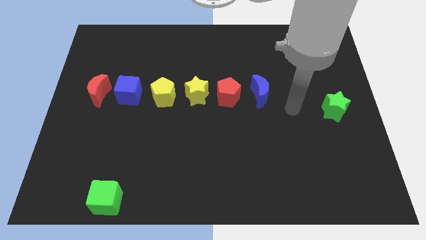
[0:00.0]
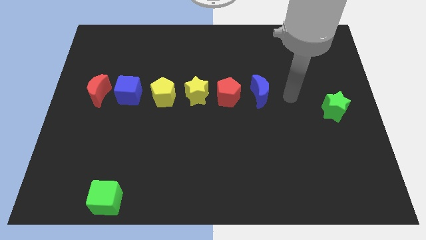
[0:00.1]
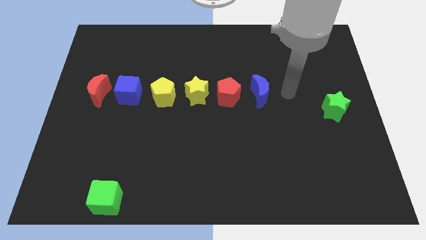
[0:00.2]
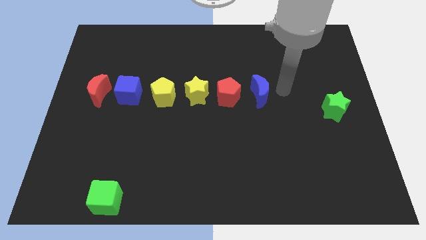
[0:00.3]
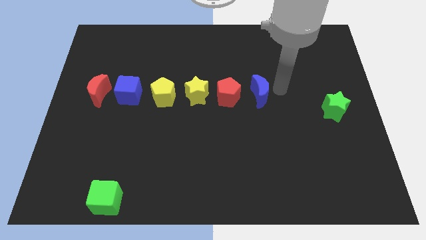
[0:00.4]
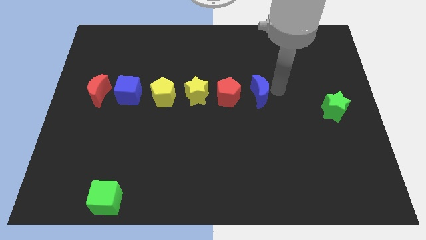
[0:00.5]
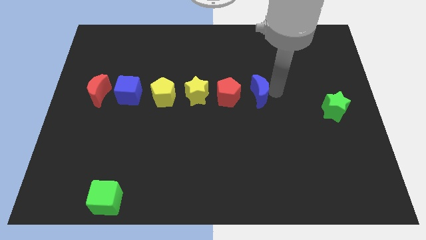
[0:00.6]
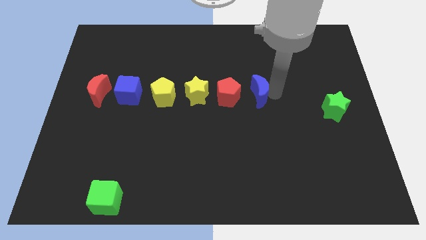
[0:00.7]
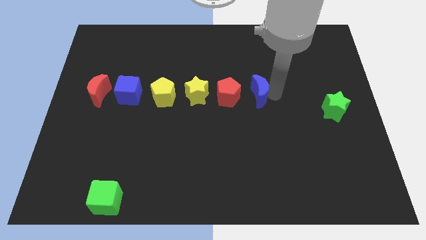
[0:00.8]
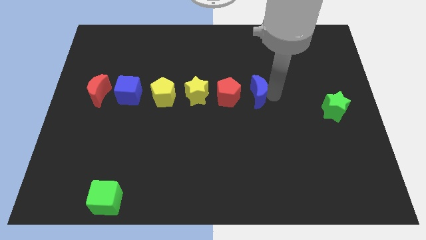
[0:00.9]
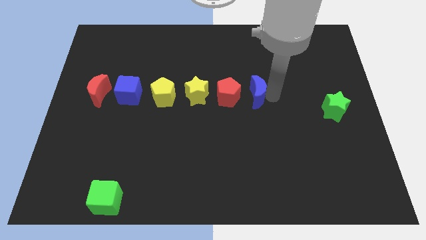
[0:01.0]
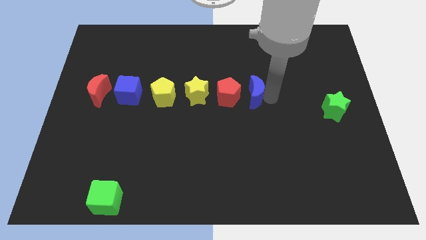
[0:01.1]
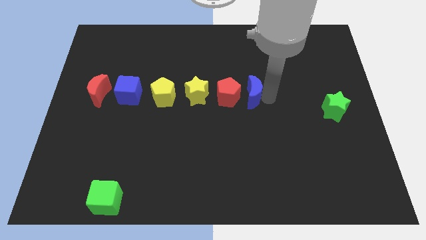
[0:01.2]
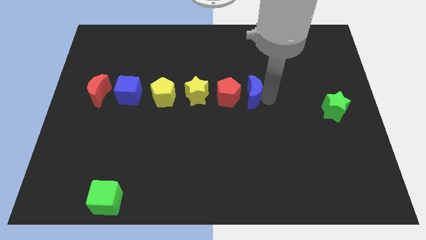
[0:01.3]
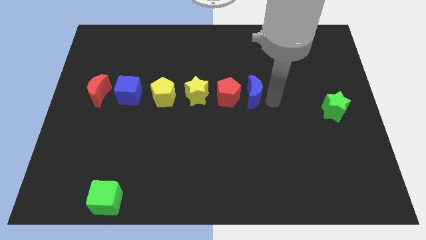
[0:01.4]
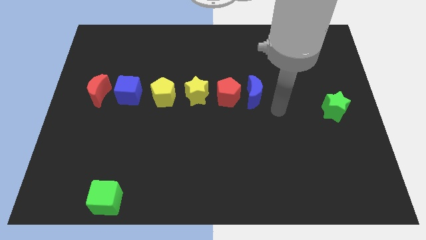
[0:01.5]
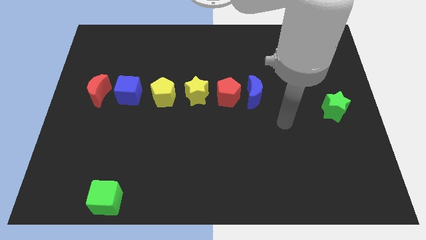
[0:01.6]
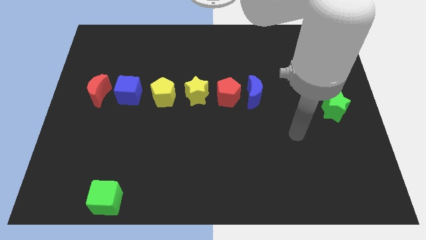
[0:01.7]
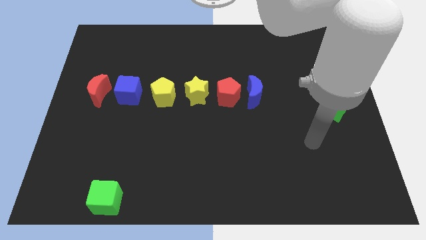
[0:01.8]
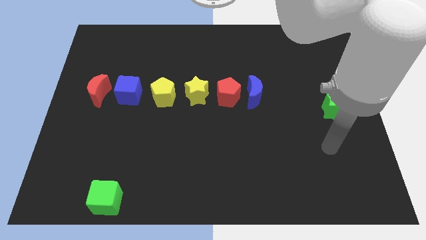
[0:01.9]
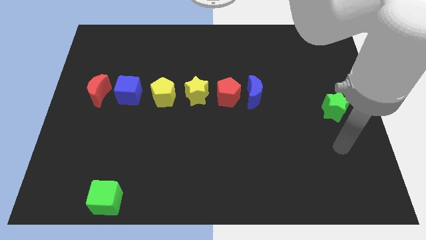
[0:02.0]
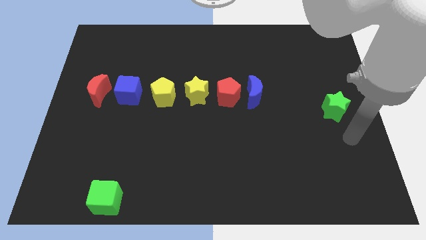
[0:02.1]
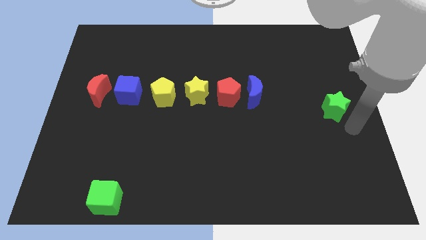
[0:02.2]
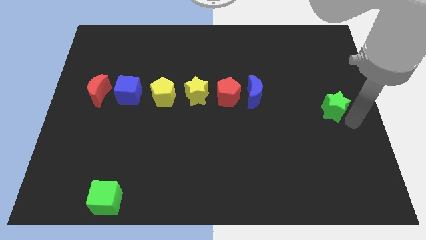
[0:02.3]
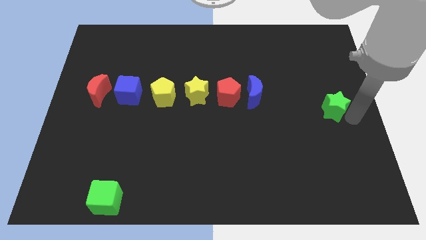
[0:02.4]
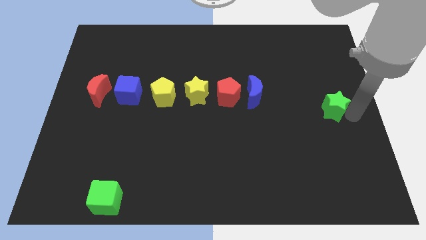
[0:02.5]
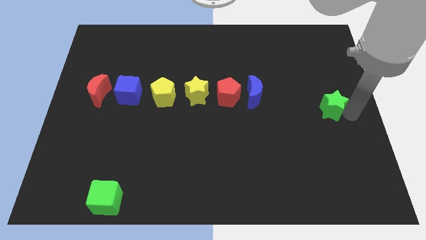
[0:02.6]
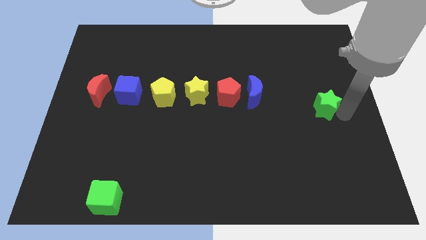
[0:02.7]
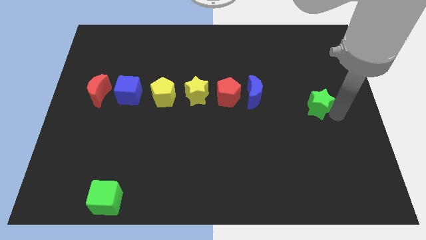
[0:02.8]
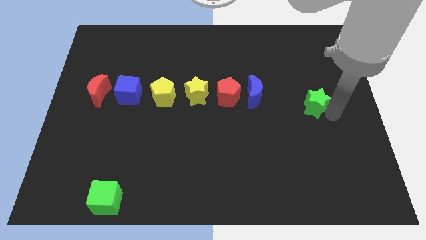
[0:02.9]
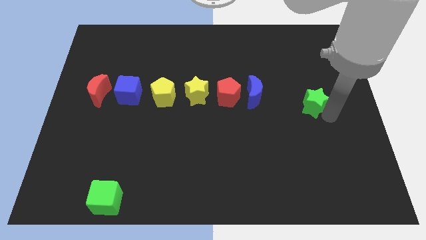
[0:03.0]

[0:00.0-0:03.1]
move the green star towards the horizontal line of blocks

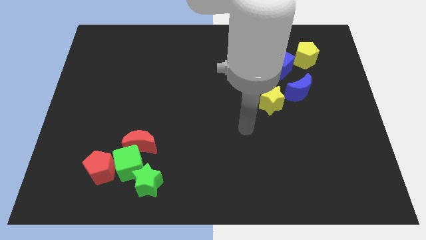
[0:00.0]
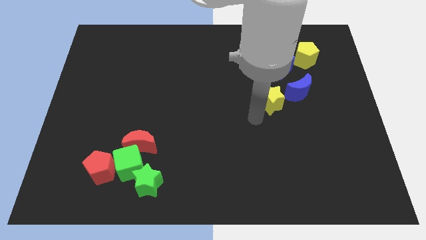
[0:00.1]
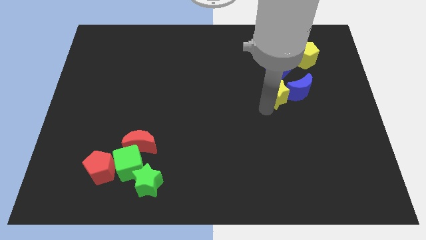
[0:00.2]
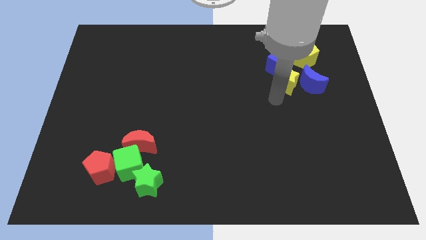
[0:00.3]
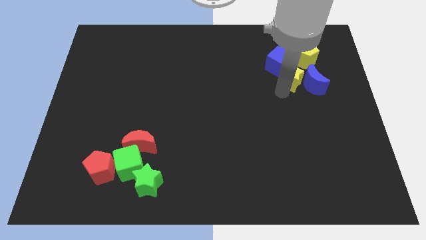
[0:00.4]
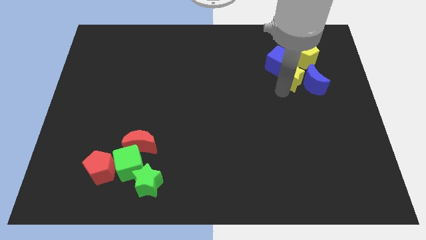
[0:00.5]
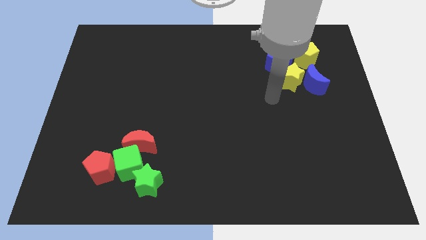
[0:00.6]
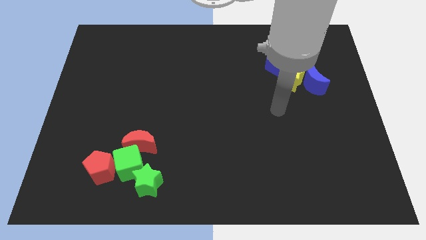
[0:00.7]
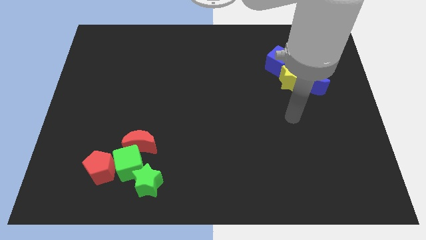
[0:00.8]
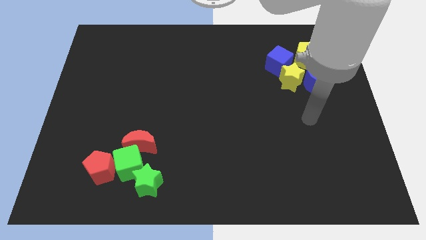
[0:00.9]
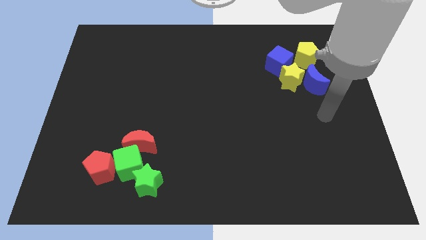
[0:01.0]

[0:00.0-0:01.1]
push the yellow star close to the yellow pentagon

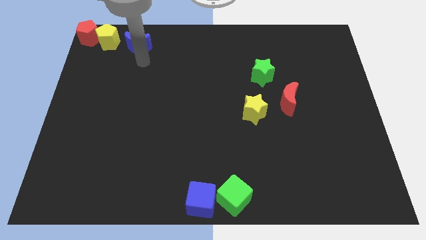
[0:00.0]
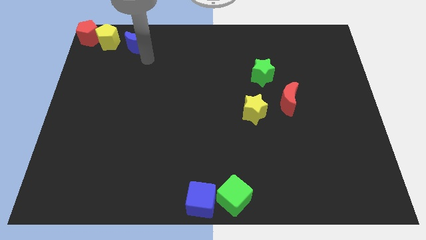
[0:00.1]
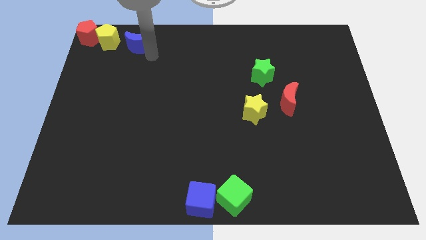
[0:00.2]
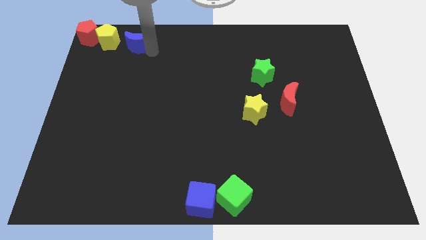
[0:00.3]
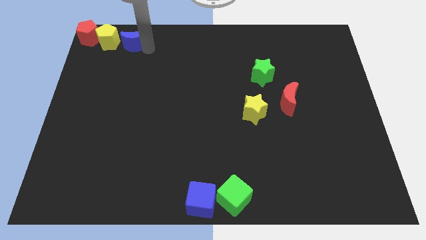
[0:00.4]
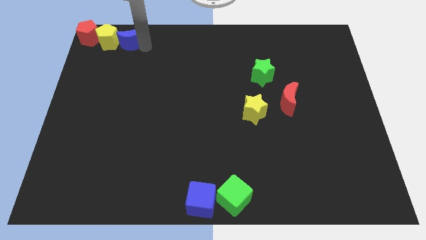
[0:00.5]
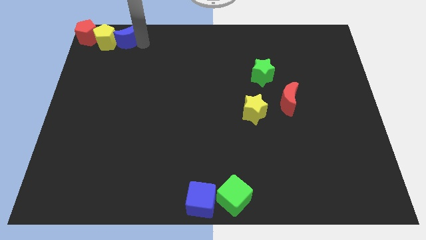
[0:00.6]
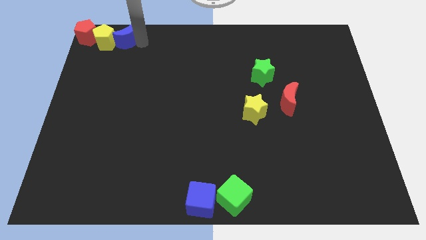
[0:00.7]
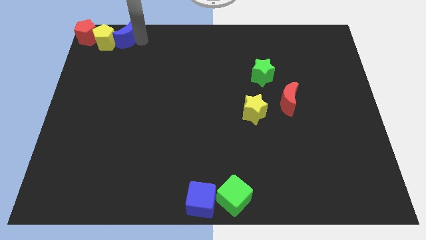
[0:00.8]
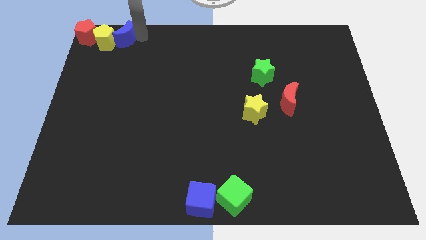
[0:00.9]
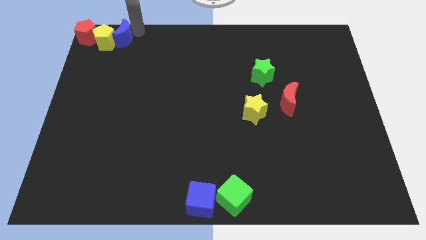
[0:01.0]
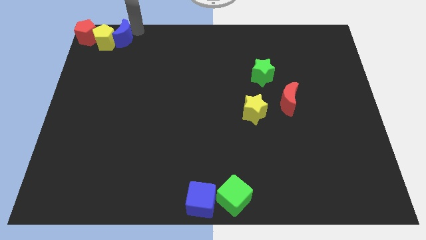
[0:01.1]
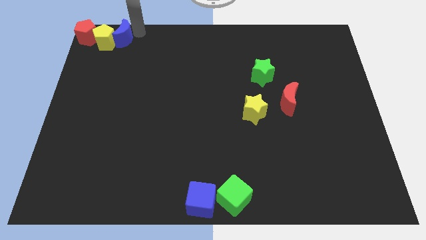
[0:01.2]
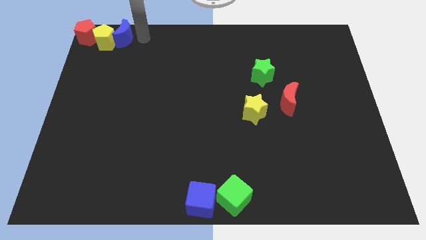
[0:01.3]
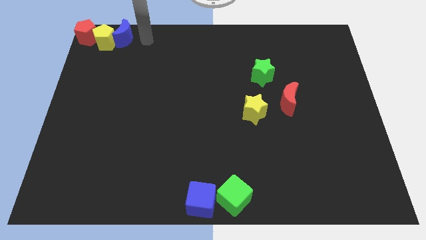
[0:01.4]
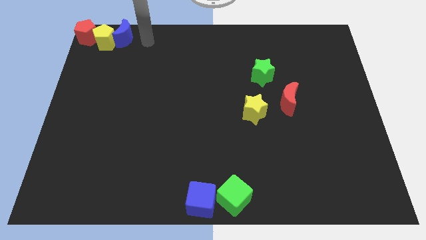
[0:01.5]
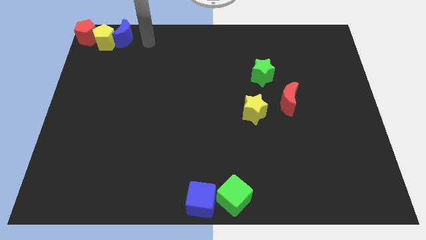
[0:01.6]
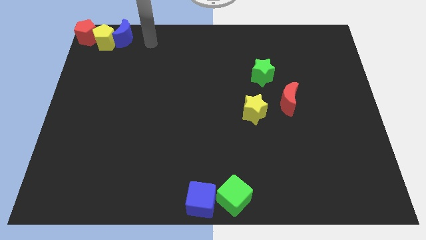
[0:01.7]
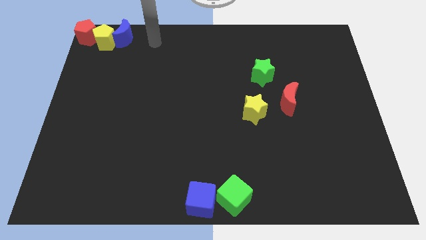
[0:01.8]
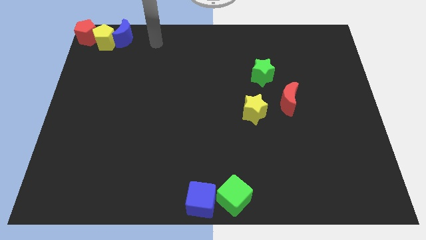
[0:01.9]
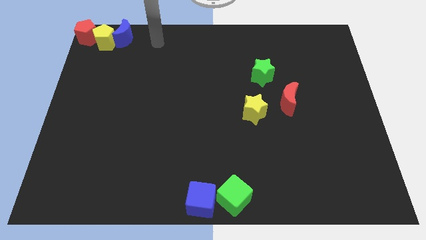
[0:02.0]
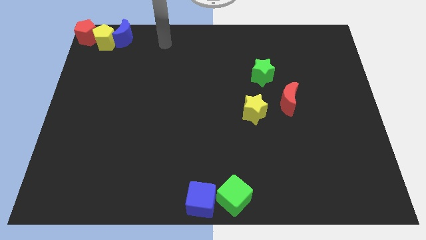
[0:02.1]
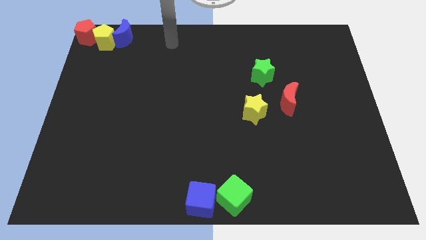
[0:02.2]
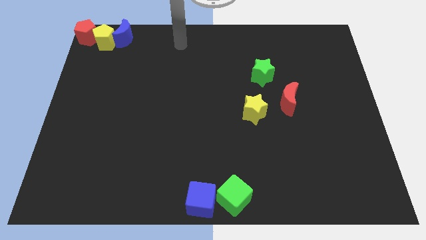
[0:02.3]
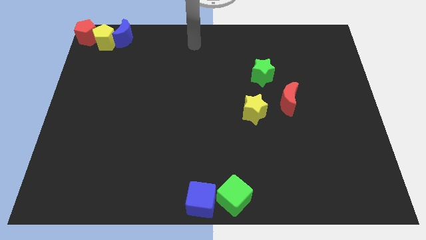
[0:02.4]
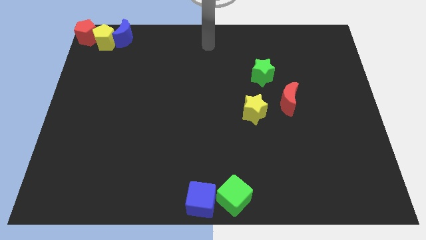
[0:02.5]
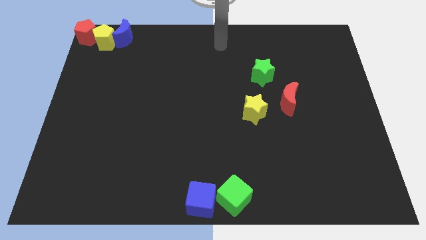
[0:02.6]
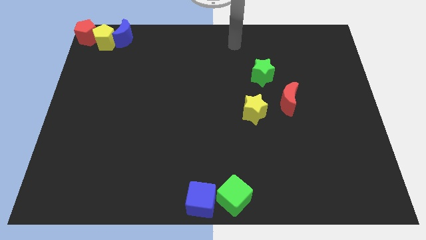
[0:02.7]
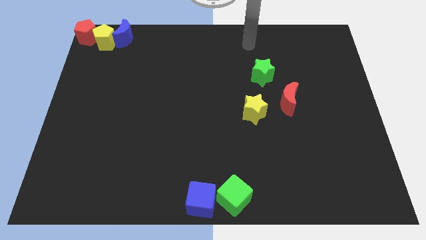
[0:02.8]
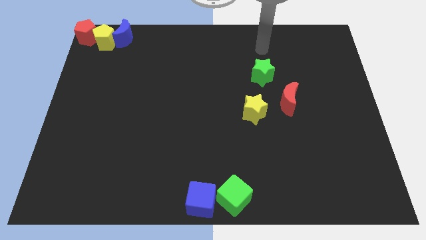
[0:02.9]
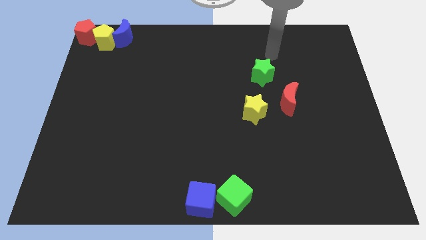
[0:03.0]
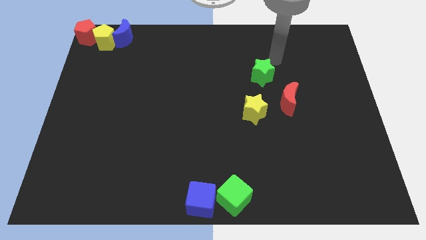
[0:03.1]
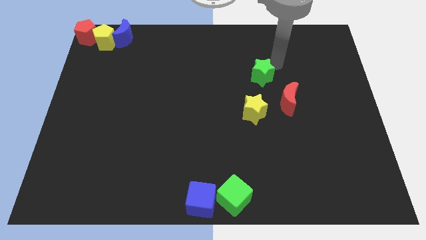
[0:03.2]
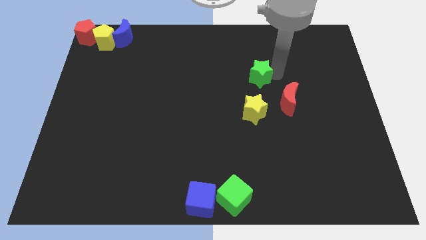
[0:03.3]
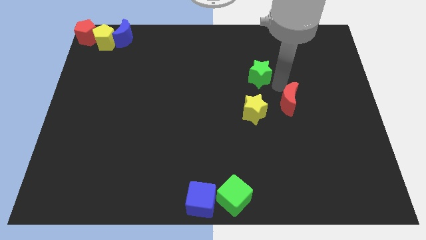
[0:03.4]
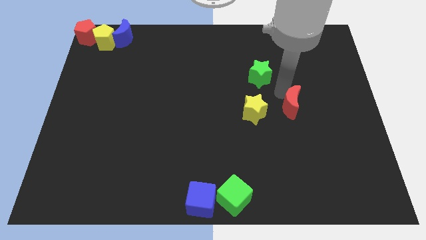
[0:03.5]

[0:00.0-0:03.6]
move your arm away from the blue moon

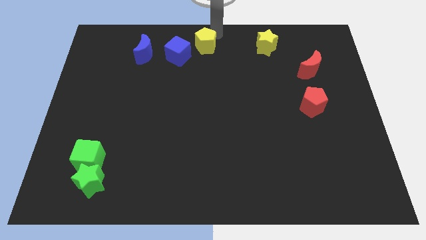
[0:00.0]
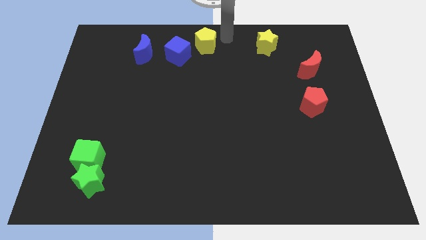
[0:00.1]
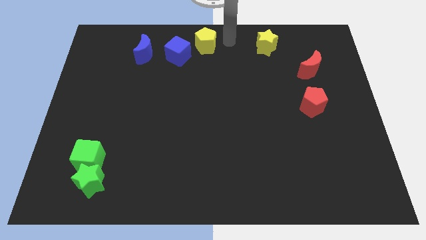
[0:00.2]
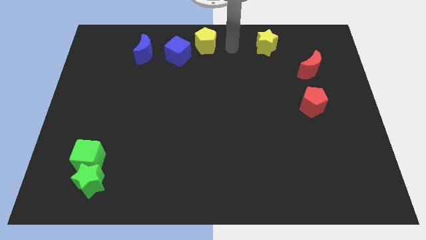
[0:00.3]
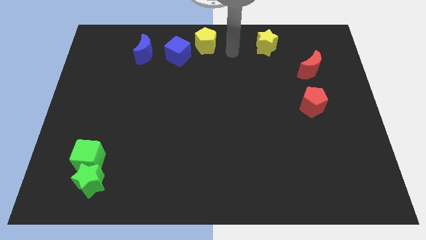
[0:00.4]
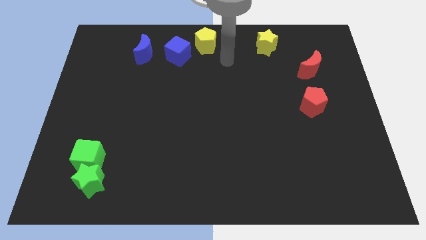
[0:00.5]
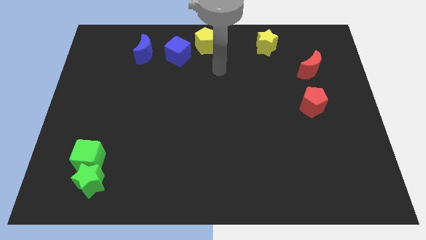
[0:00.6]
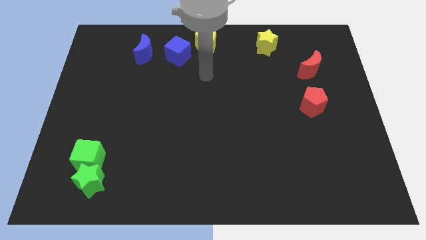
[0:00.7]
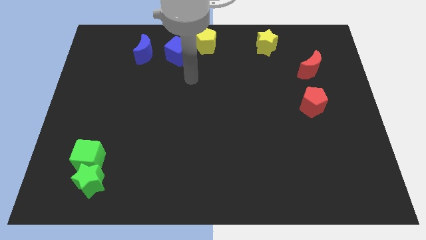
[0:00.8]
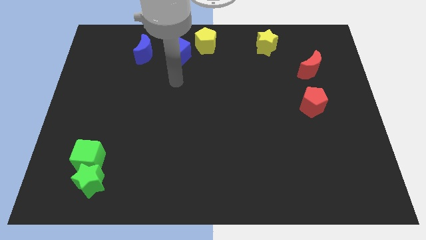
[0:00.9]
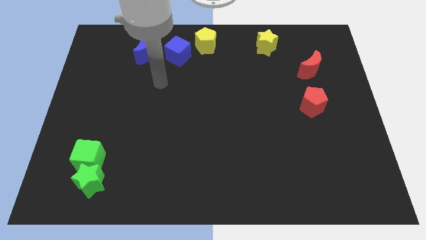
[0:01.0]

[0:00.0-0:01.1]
move your arm away from yellow pentagon

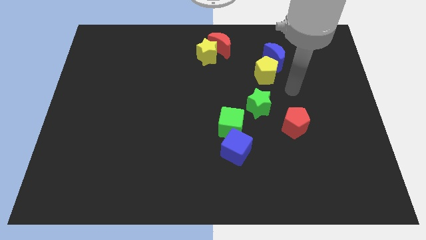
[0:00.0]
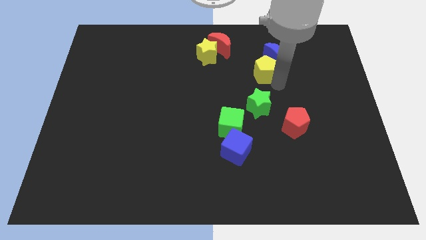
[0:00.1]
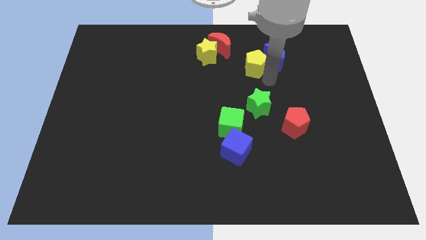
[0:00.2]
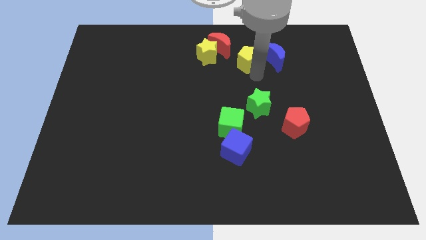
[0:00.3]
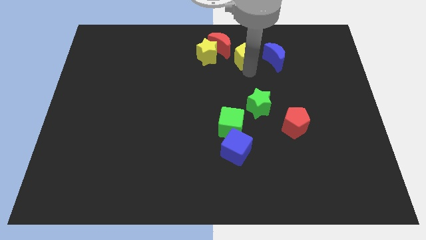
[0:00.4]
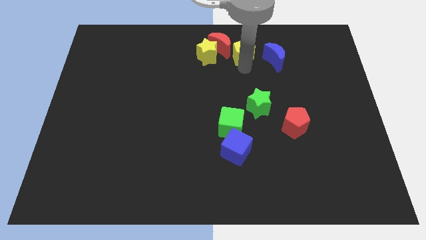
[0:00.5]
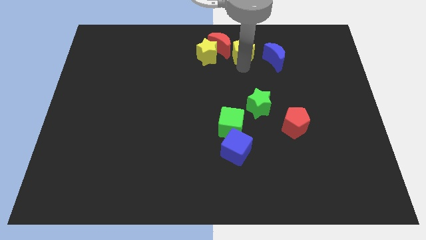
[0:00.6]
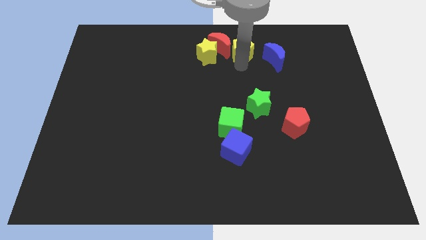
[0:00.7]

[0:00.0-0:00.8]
move the yellow pentagon parallel to the yellow star
